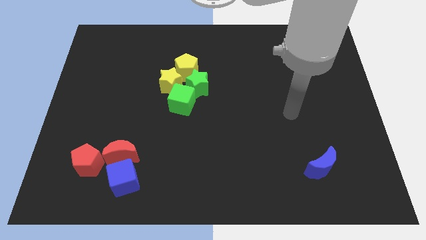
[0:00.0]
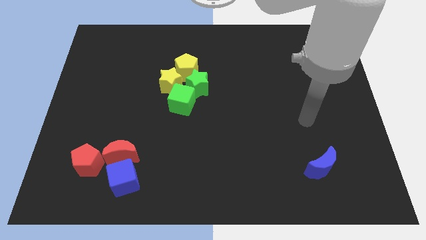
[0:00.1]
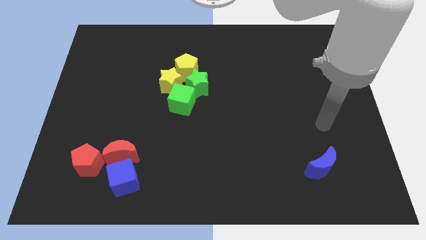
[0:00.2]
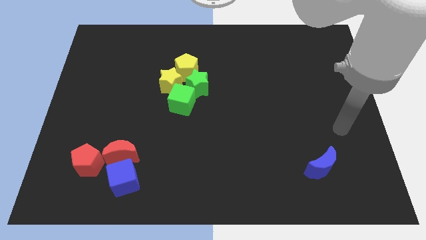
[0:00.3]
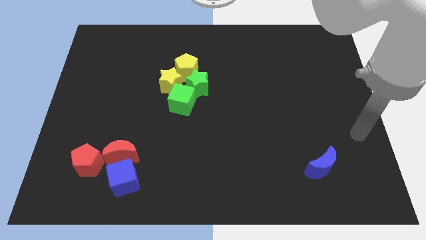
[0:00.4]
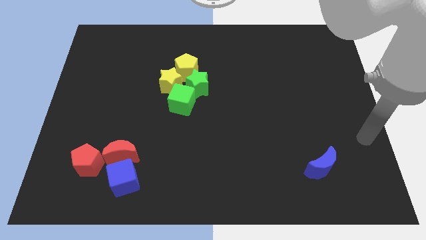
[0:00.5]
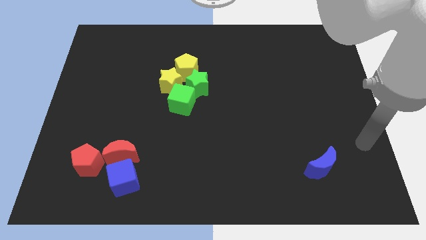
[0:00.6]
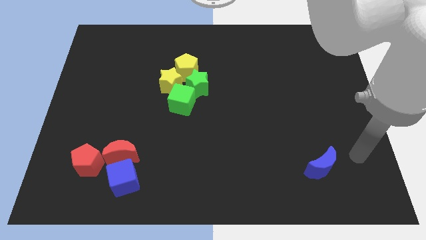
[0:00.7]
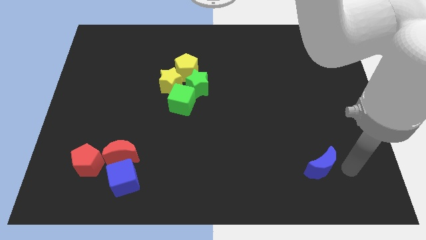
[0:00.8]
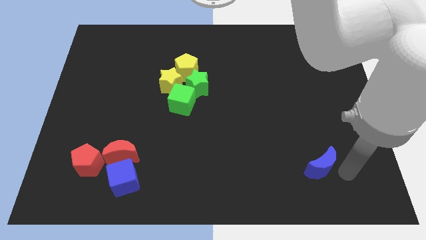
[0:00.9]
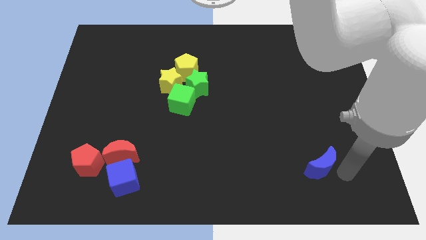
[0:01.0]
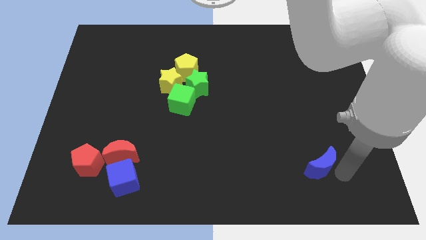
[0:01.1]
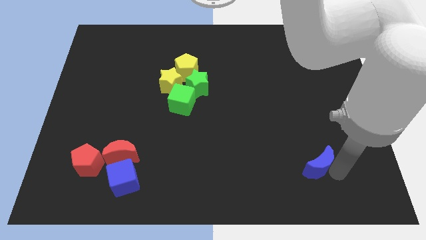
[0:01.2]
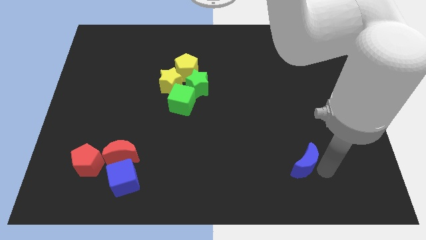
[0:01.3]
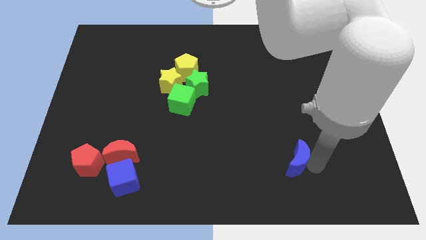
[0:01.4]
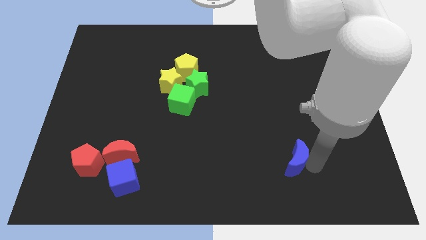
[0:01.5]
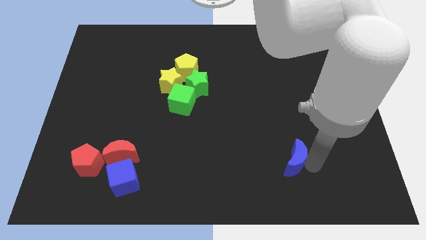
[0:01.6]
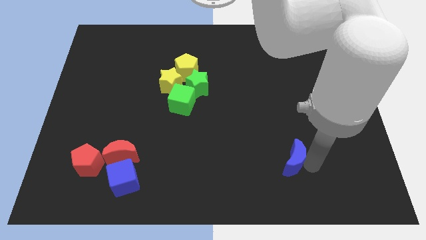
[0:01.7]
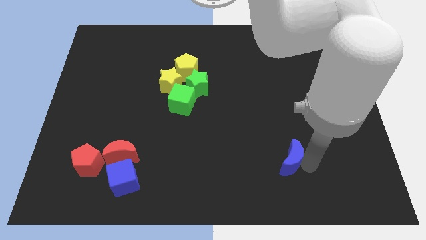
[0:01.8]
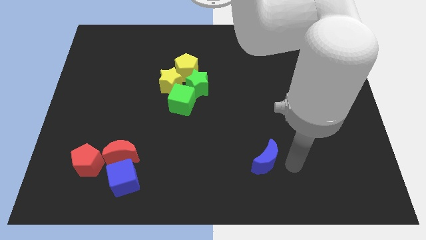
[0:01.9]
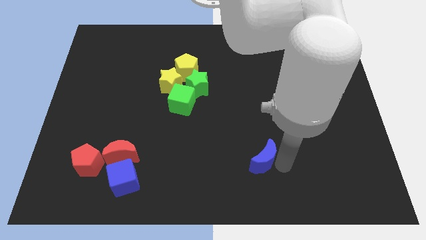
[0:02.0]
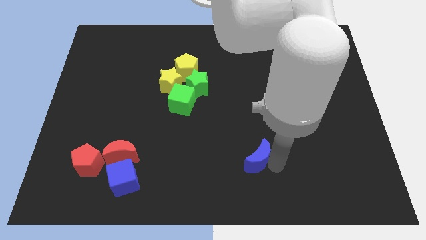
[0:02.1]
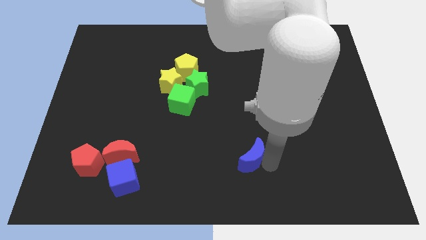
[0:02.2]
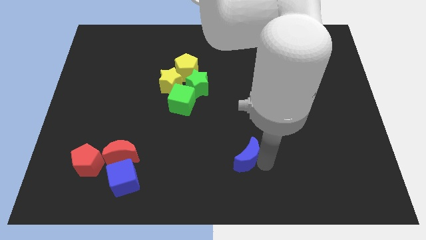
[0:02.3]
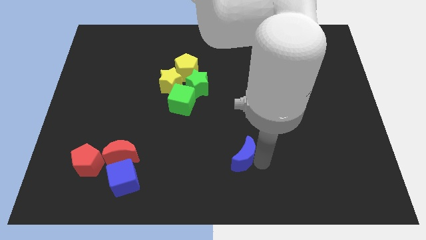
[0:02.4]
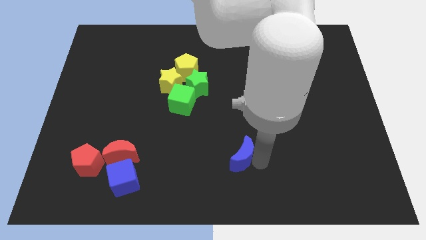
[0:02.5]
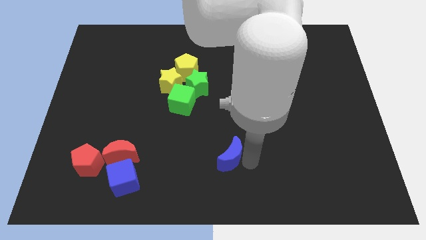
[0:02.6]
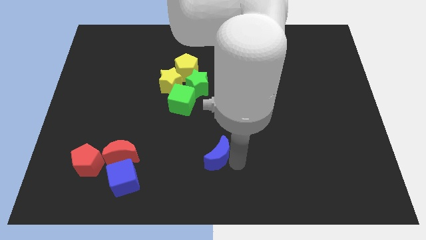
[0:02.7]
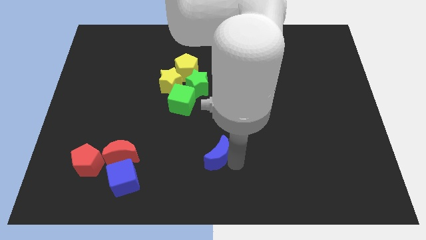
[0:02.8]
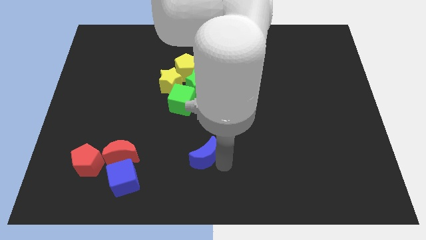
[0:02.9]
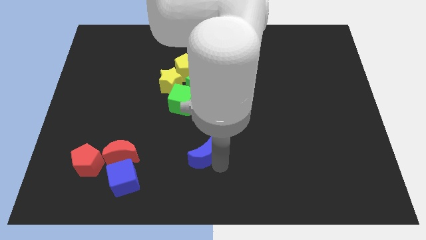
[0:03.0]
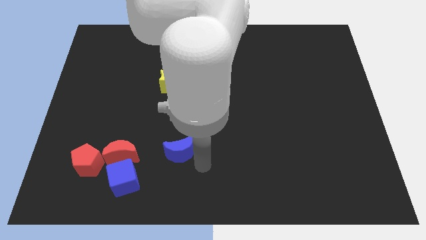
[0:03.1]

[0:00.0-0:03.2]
move the blue crescent to the bottom right of the green cube

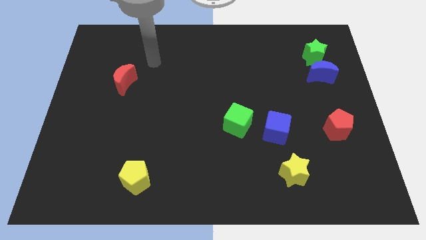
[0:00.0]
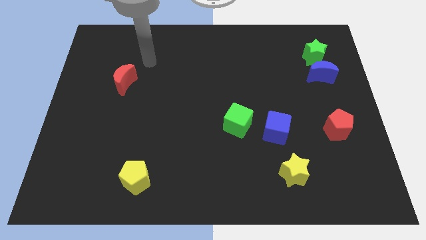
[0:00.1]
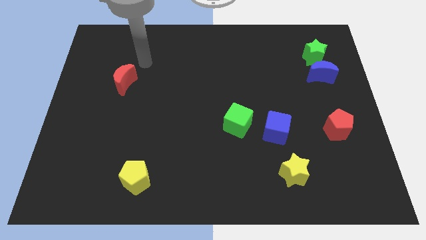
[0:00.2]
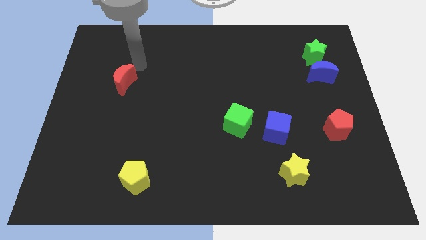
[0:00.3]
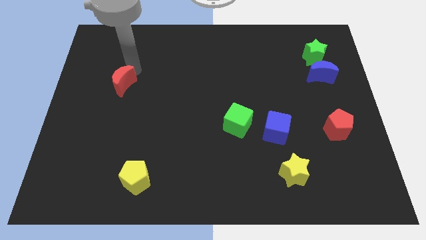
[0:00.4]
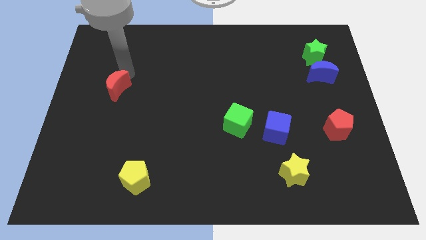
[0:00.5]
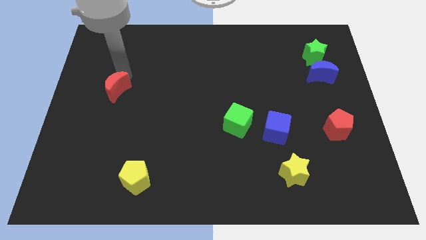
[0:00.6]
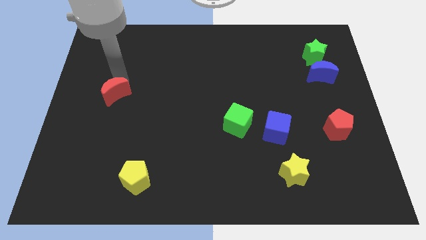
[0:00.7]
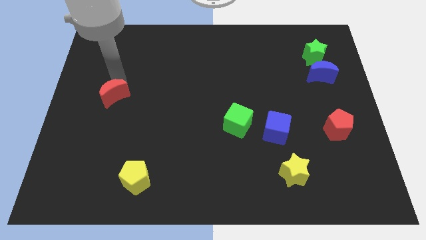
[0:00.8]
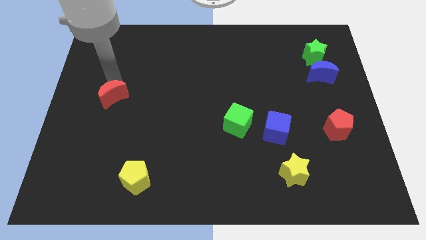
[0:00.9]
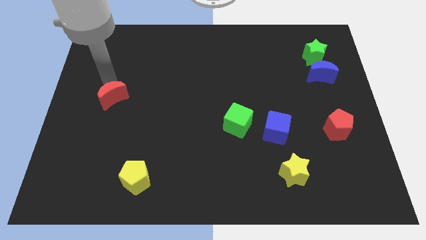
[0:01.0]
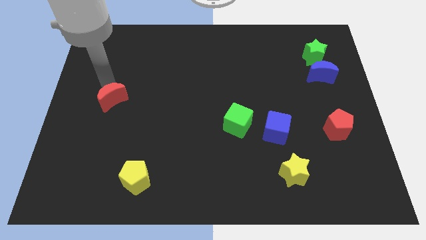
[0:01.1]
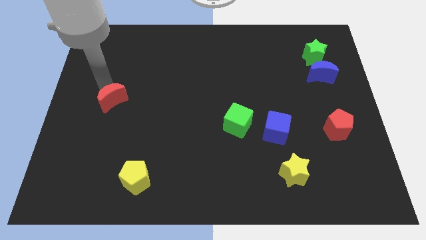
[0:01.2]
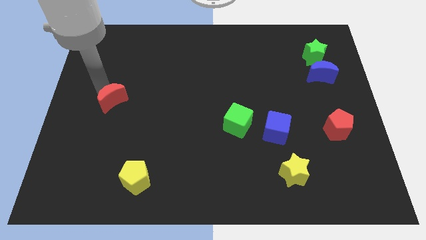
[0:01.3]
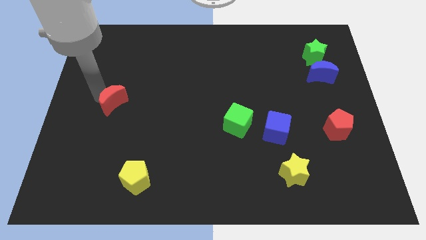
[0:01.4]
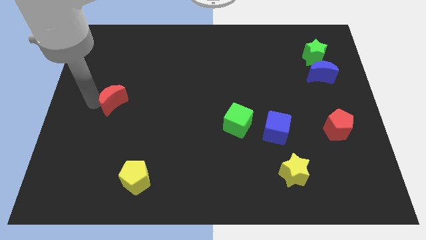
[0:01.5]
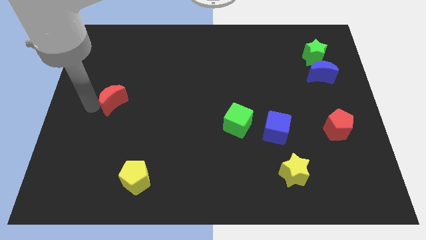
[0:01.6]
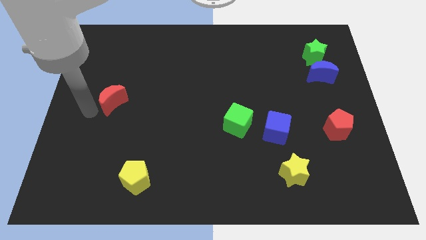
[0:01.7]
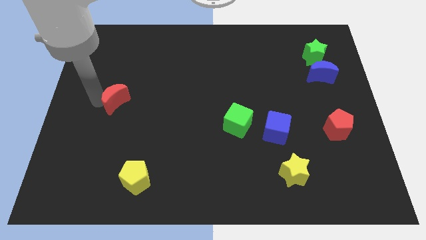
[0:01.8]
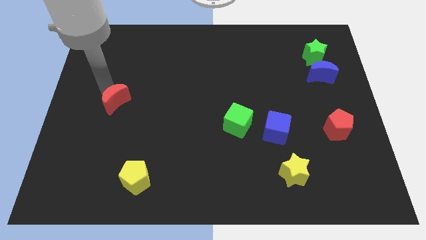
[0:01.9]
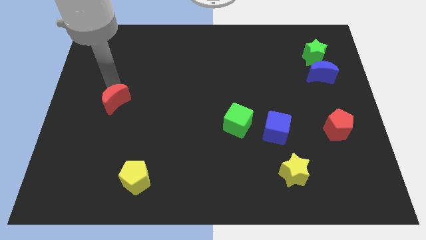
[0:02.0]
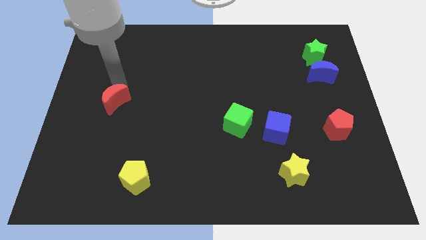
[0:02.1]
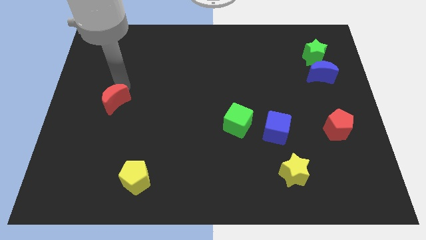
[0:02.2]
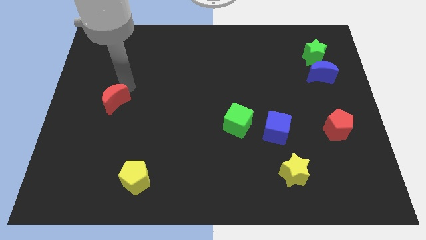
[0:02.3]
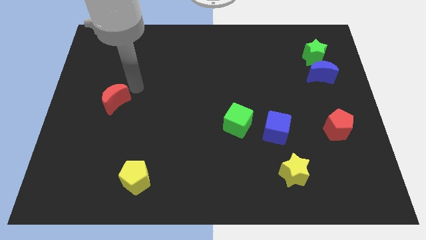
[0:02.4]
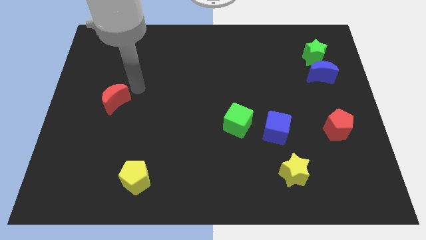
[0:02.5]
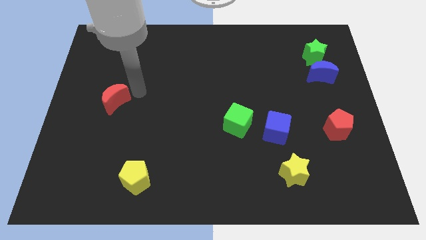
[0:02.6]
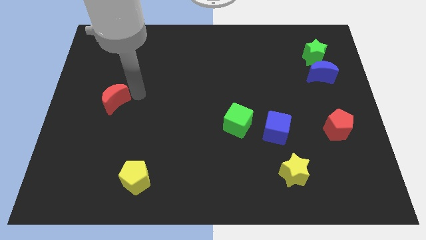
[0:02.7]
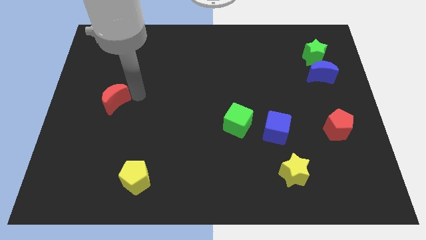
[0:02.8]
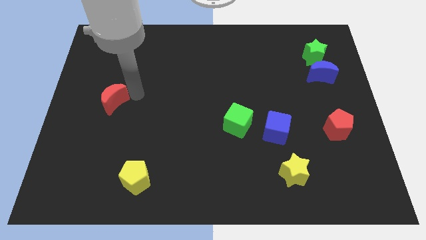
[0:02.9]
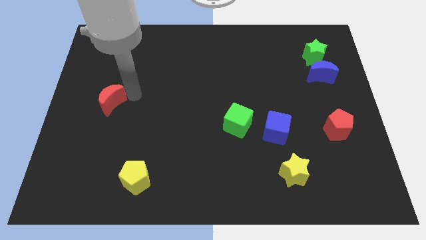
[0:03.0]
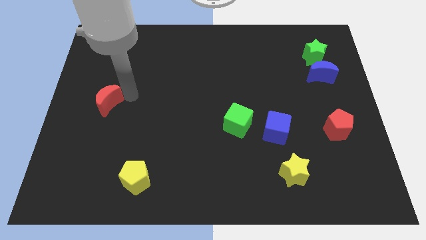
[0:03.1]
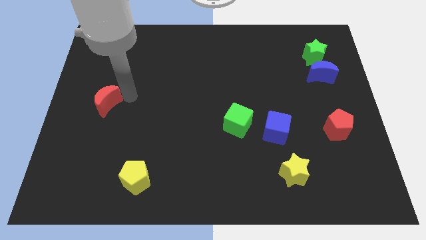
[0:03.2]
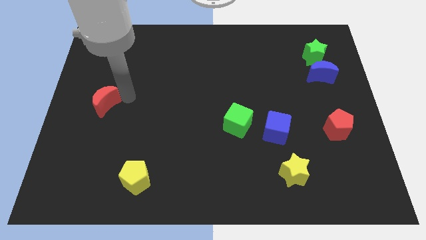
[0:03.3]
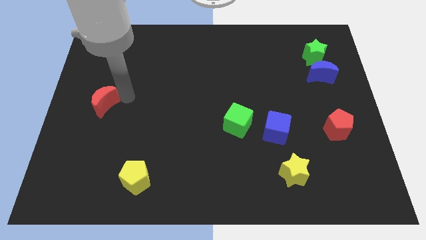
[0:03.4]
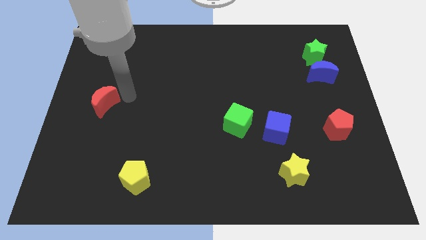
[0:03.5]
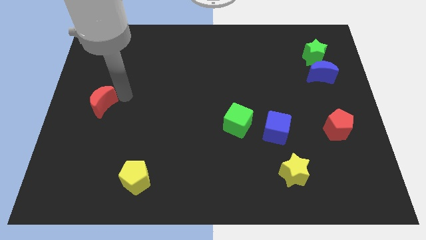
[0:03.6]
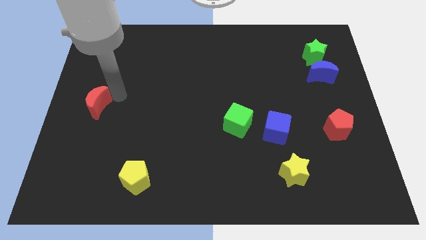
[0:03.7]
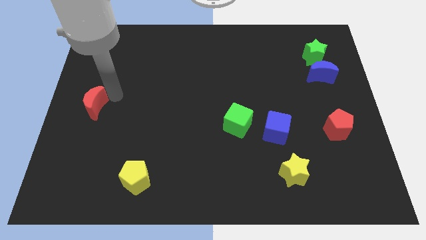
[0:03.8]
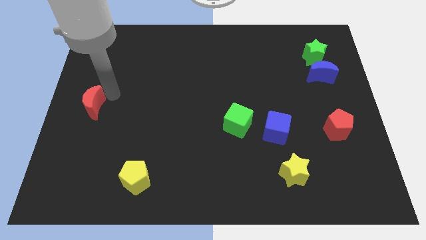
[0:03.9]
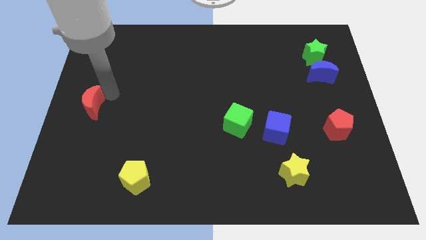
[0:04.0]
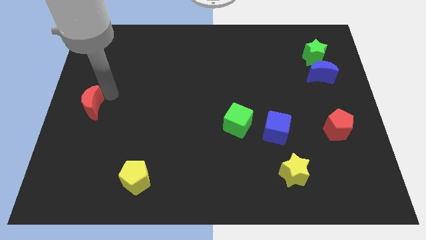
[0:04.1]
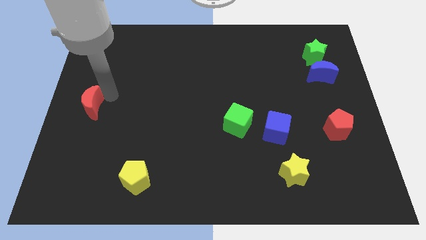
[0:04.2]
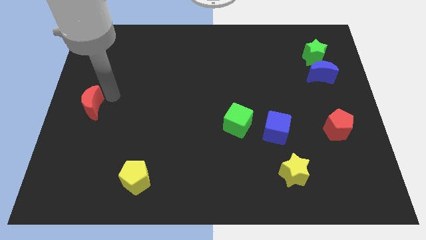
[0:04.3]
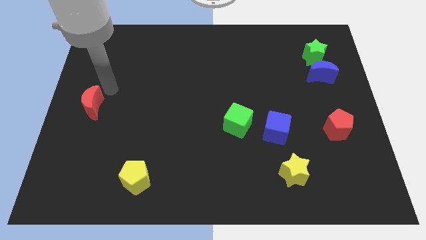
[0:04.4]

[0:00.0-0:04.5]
place red crescent diagonally to the yellow pentagon

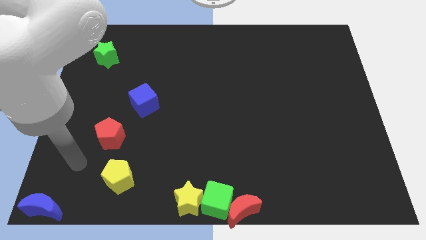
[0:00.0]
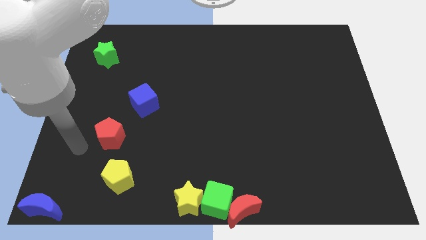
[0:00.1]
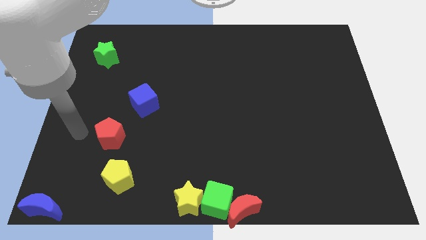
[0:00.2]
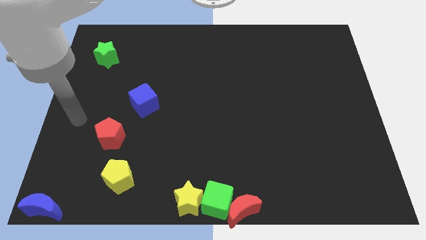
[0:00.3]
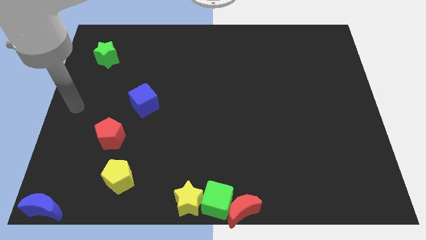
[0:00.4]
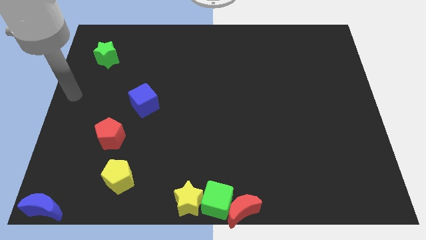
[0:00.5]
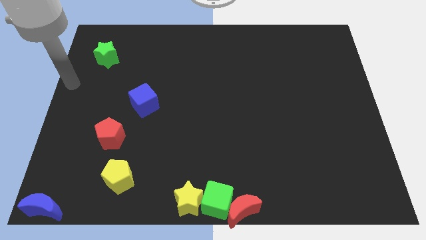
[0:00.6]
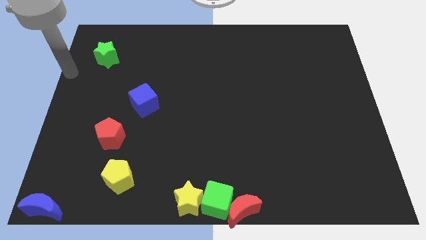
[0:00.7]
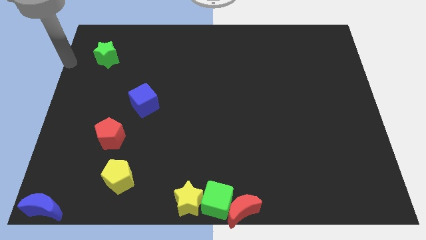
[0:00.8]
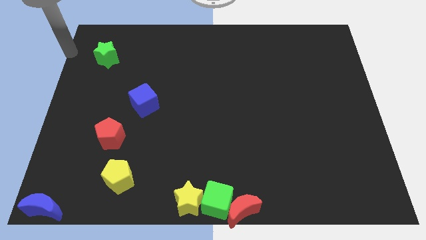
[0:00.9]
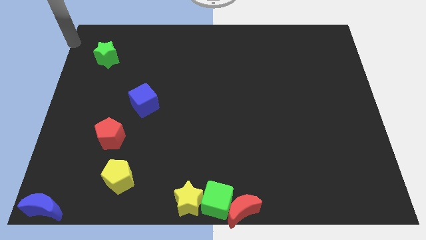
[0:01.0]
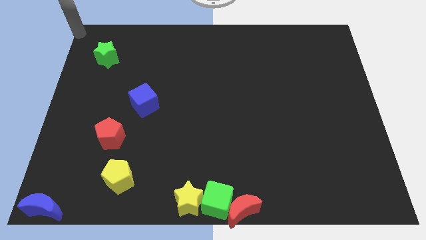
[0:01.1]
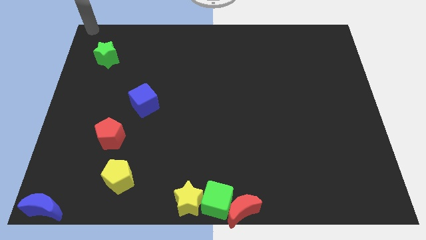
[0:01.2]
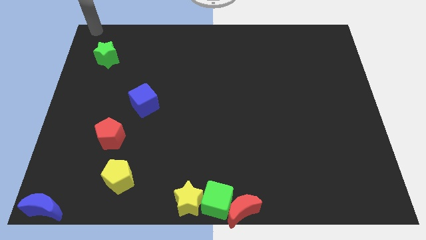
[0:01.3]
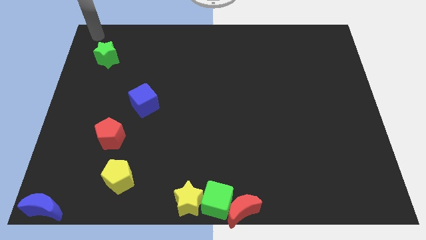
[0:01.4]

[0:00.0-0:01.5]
slide the green star towards the bottom
